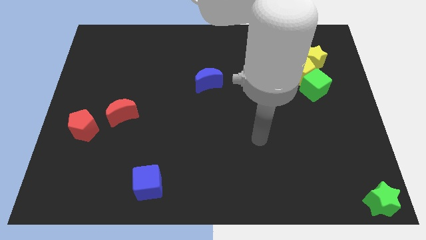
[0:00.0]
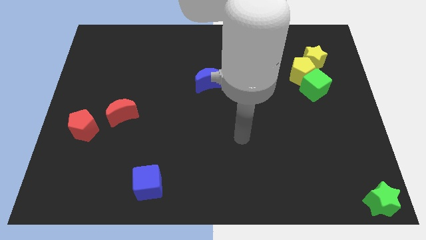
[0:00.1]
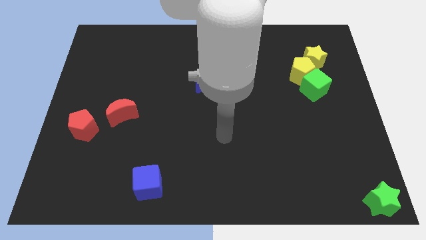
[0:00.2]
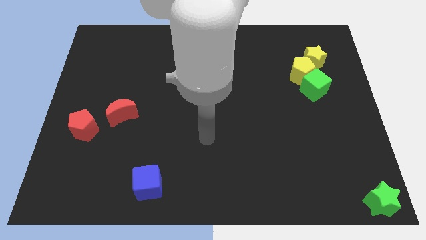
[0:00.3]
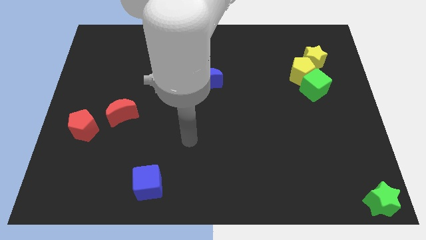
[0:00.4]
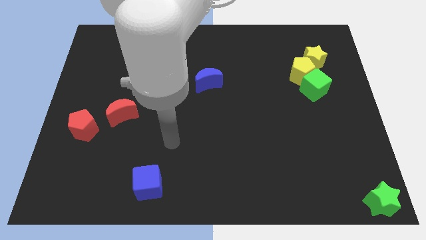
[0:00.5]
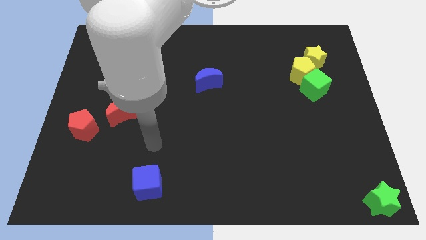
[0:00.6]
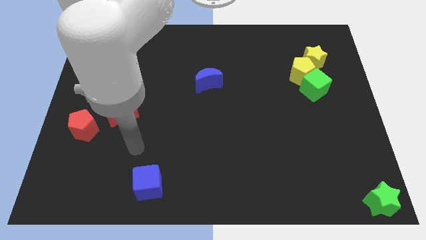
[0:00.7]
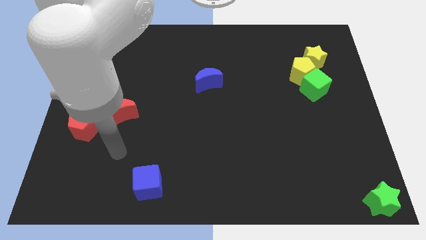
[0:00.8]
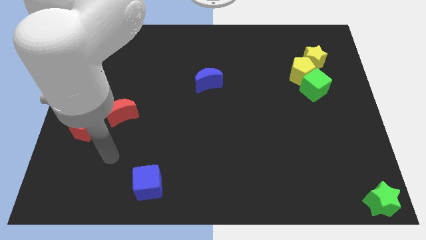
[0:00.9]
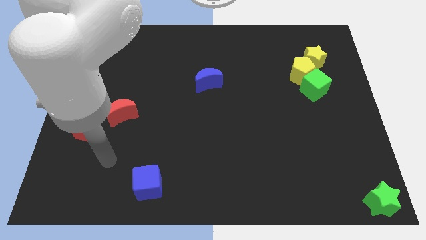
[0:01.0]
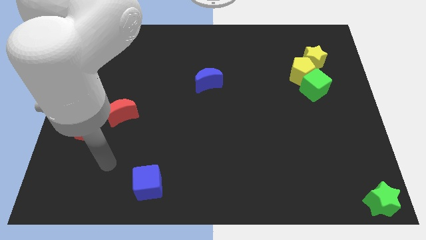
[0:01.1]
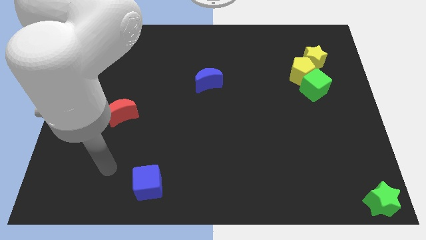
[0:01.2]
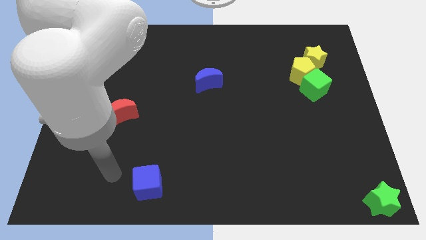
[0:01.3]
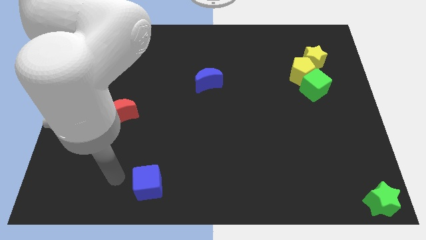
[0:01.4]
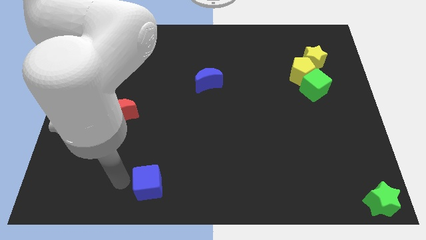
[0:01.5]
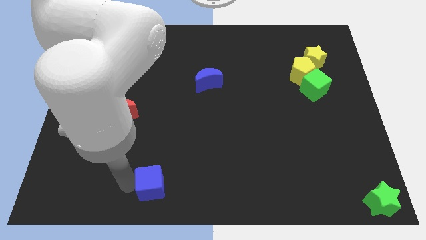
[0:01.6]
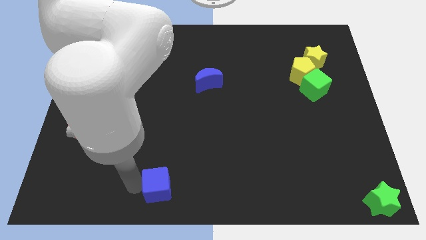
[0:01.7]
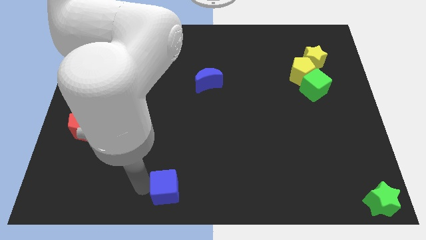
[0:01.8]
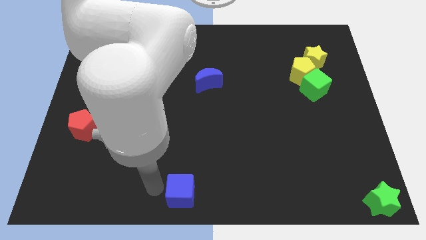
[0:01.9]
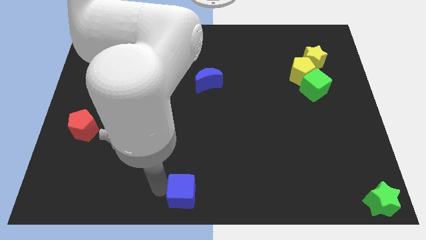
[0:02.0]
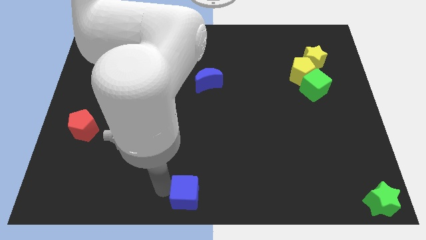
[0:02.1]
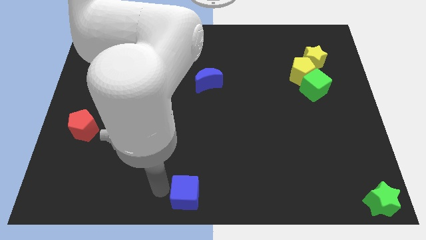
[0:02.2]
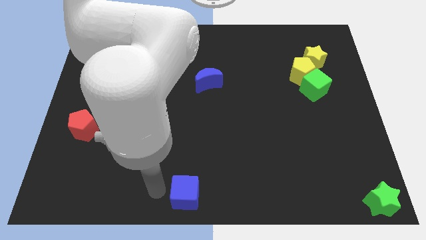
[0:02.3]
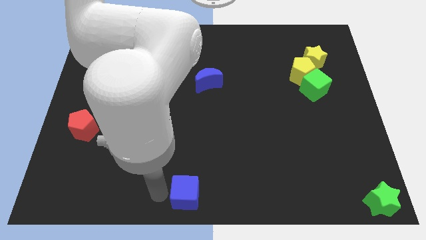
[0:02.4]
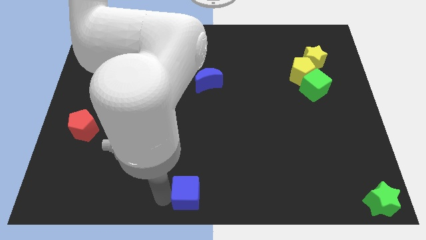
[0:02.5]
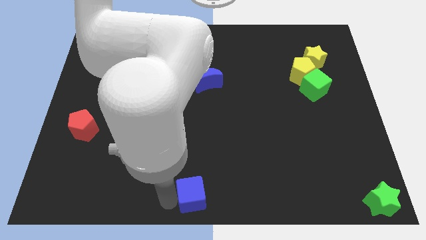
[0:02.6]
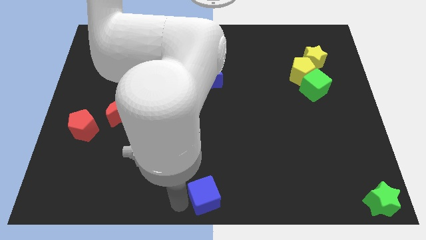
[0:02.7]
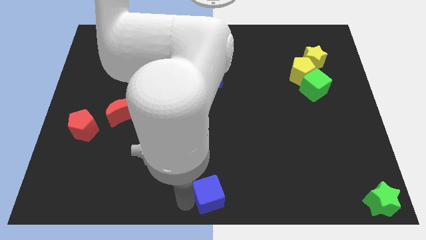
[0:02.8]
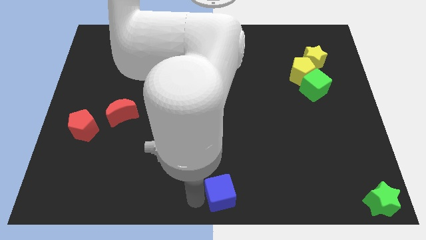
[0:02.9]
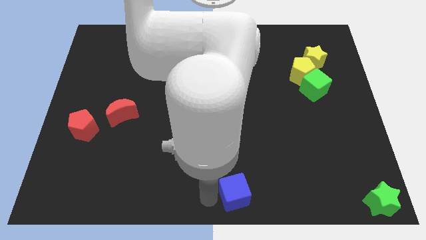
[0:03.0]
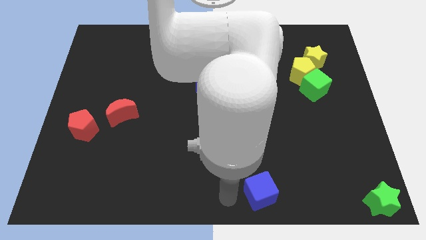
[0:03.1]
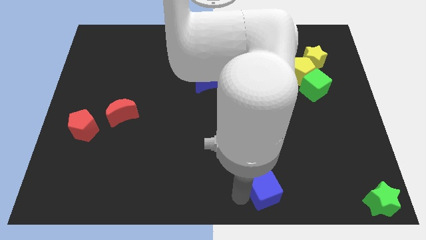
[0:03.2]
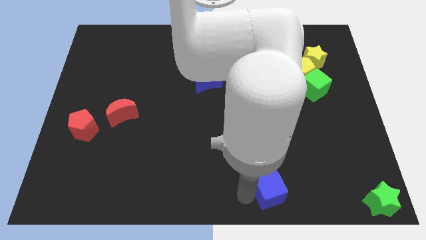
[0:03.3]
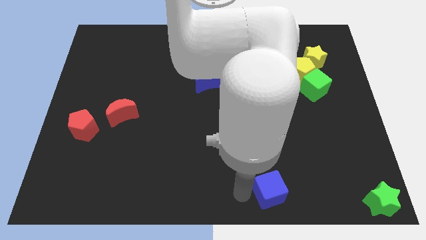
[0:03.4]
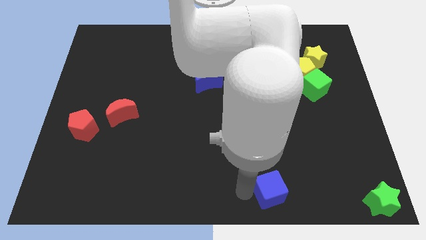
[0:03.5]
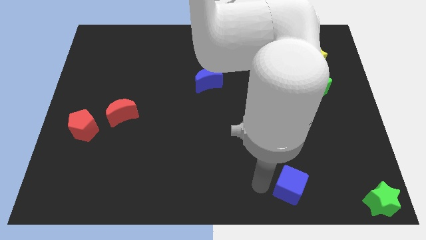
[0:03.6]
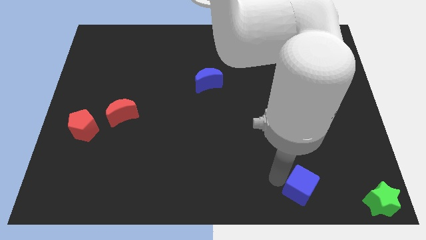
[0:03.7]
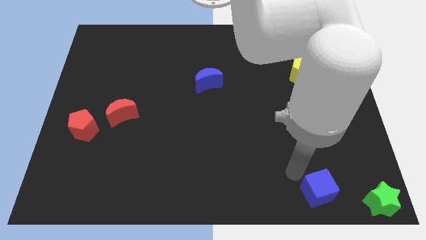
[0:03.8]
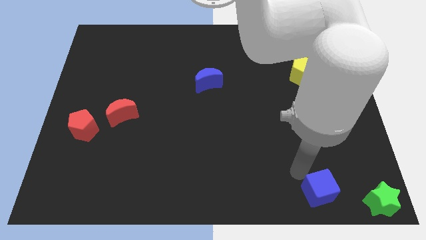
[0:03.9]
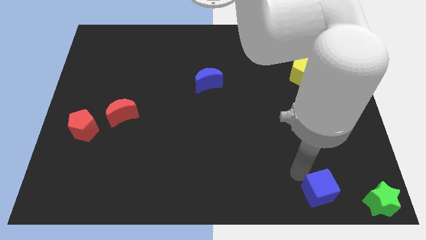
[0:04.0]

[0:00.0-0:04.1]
push the blue cube towards the green star

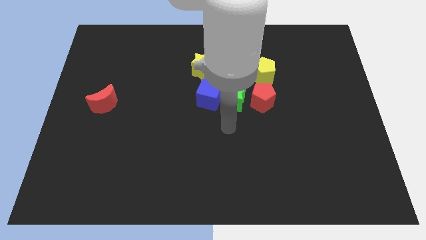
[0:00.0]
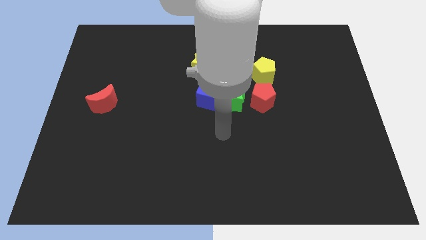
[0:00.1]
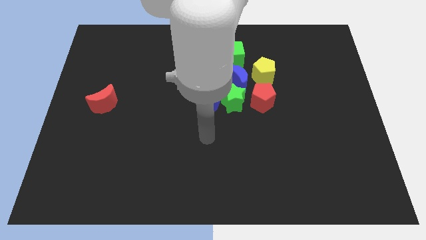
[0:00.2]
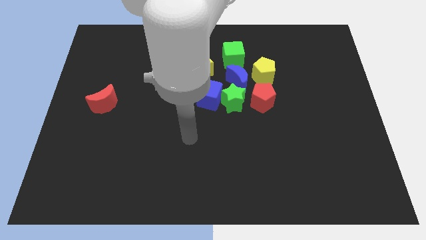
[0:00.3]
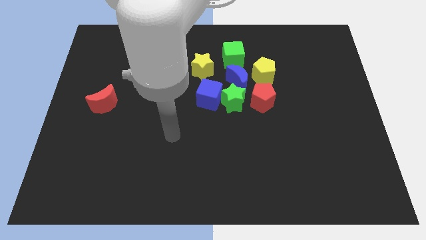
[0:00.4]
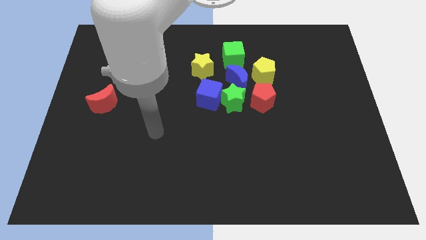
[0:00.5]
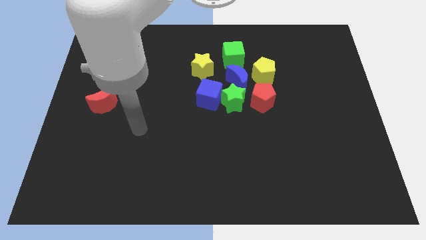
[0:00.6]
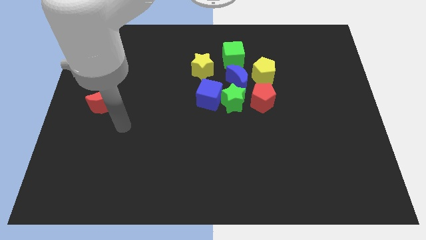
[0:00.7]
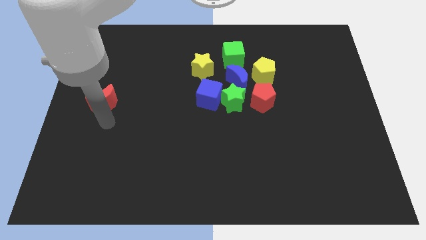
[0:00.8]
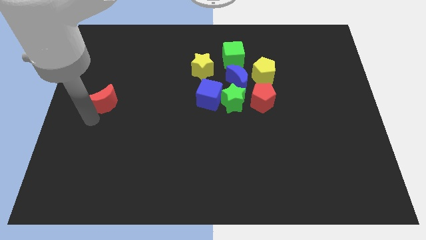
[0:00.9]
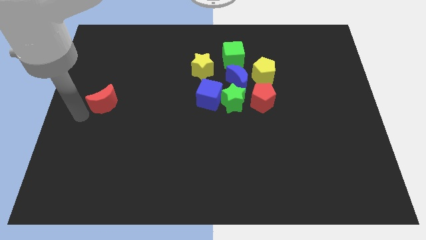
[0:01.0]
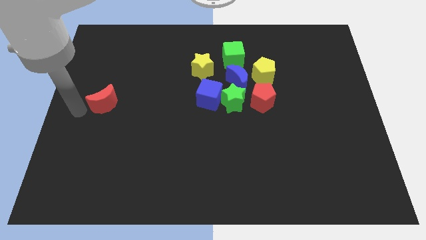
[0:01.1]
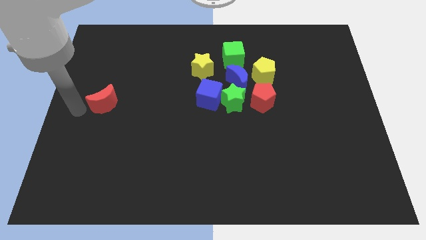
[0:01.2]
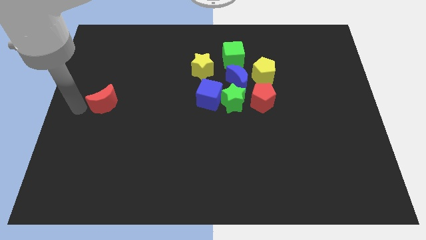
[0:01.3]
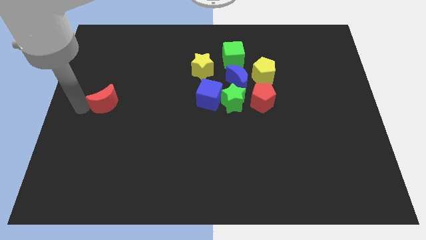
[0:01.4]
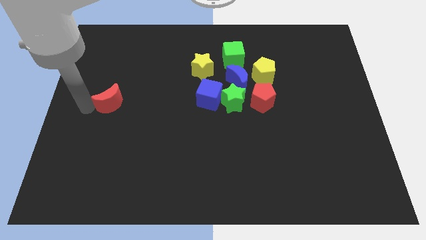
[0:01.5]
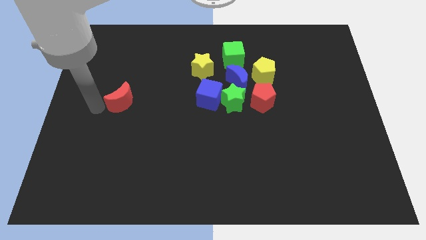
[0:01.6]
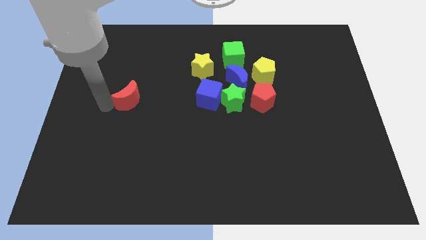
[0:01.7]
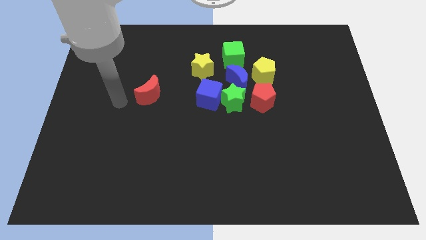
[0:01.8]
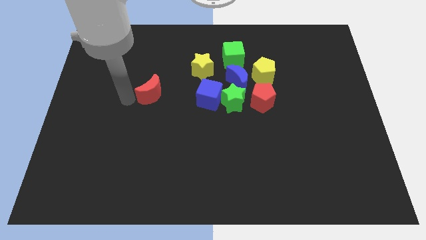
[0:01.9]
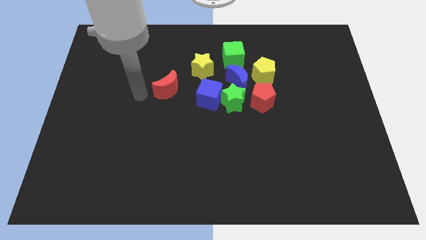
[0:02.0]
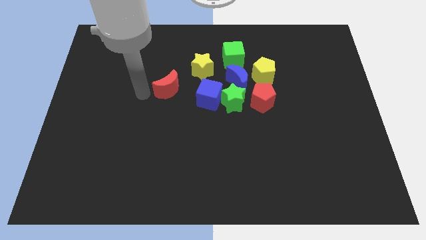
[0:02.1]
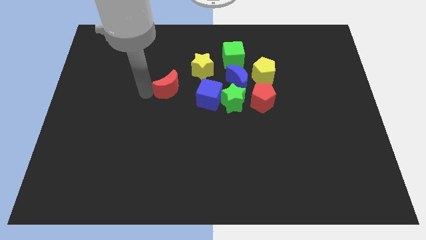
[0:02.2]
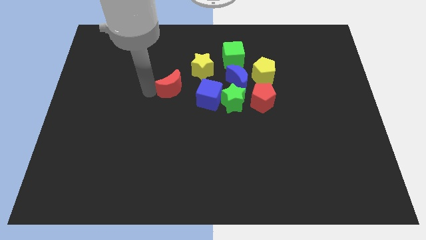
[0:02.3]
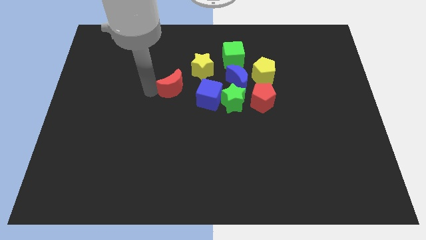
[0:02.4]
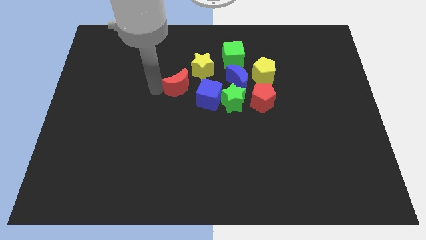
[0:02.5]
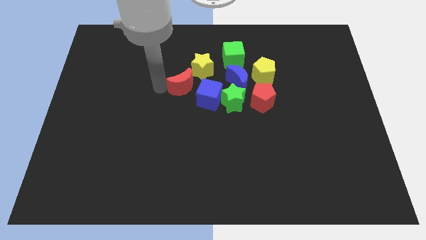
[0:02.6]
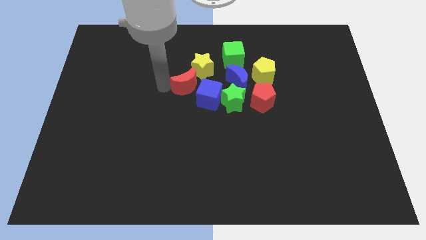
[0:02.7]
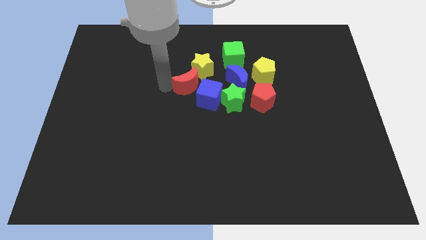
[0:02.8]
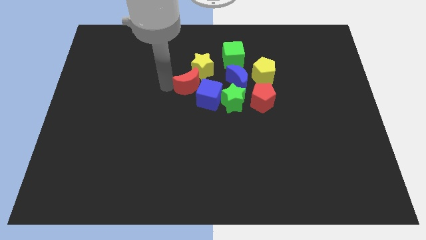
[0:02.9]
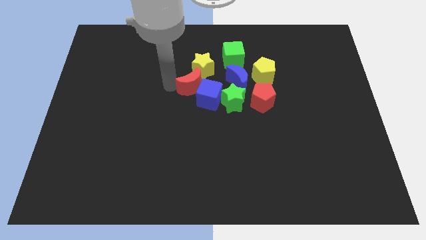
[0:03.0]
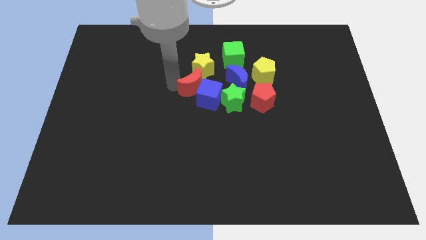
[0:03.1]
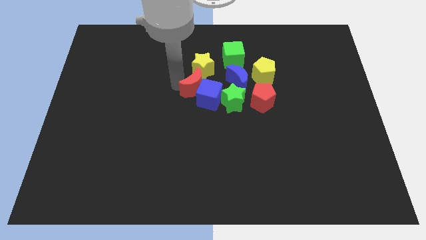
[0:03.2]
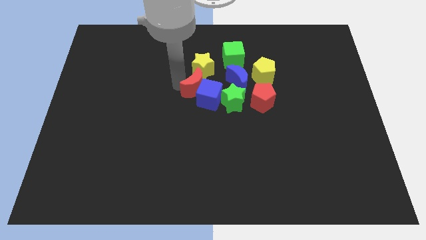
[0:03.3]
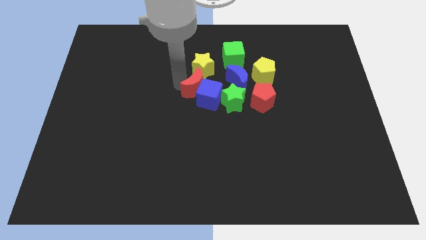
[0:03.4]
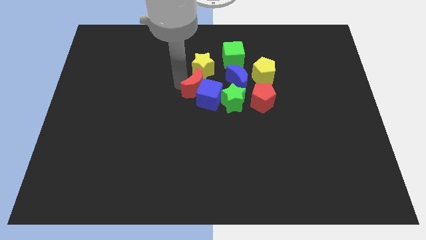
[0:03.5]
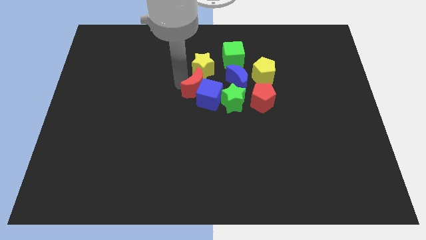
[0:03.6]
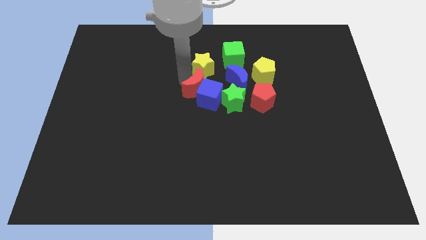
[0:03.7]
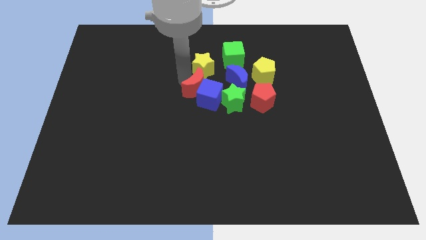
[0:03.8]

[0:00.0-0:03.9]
push the red crescent into the blue cube and yellow star

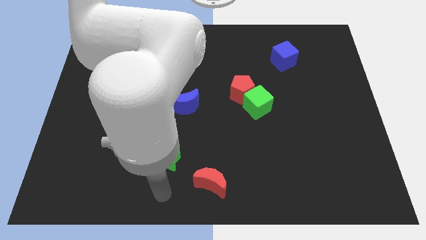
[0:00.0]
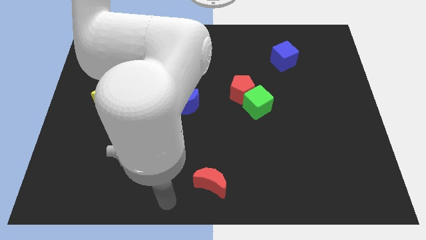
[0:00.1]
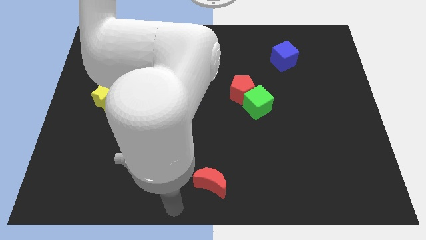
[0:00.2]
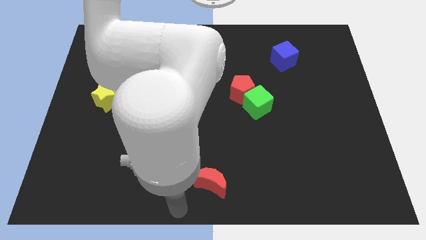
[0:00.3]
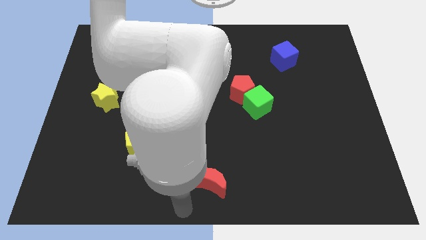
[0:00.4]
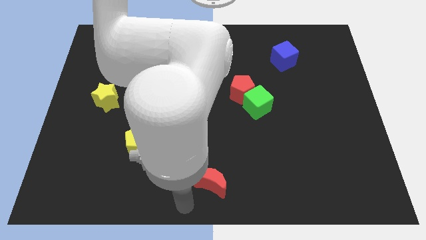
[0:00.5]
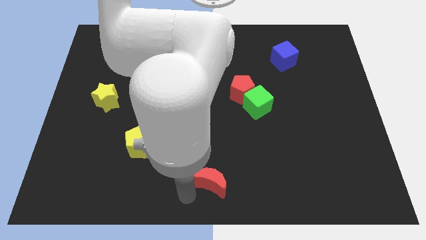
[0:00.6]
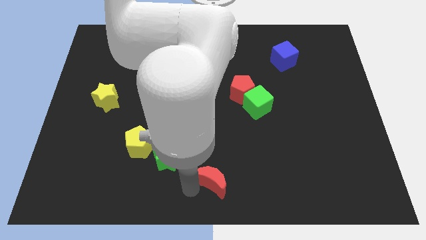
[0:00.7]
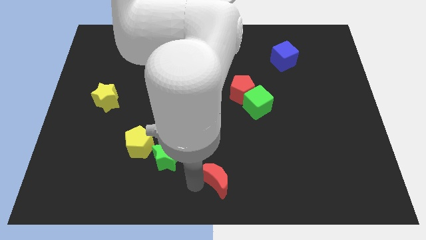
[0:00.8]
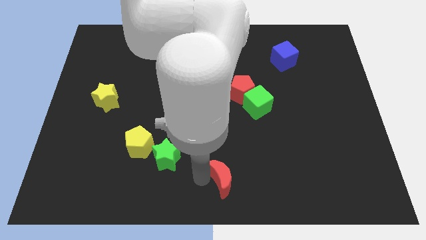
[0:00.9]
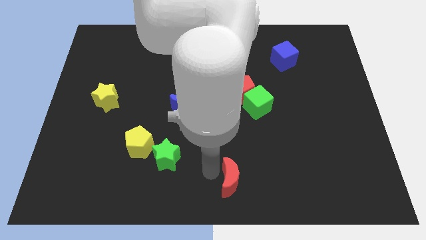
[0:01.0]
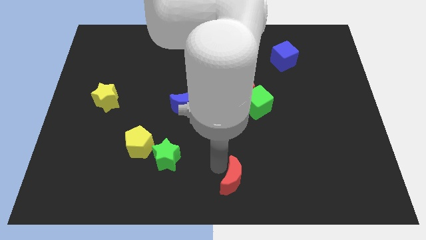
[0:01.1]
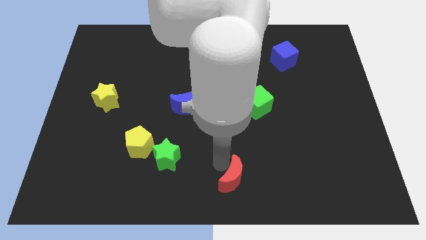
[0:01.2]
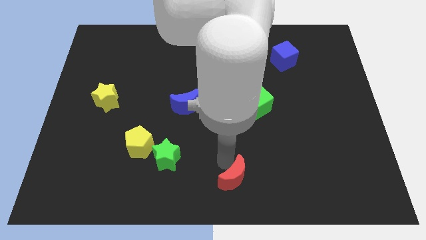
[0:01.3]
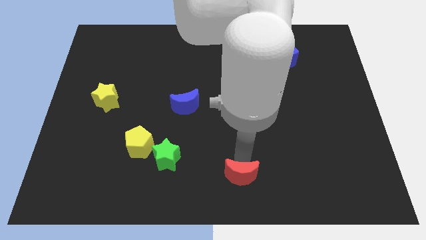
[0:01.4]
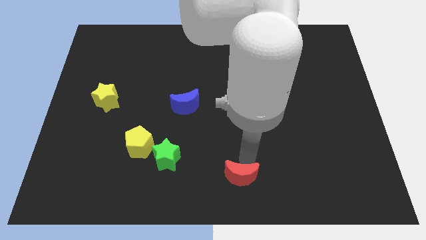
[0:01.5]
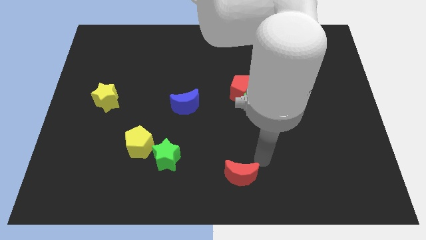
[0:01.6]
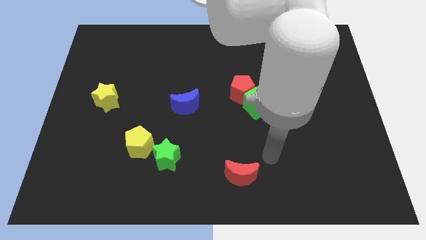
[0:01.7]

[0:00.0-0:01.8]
put the red moon vertically below the red pentagon
